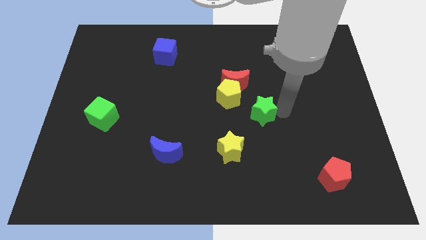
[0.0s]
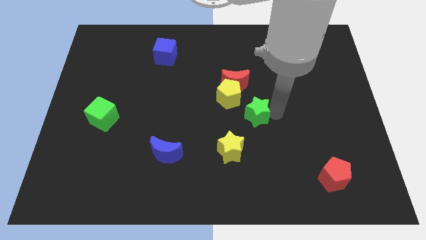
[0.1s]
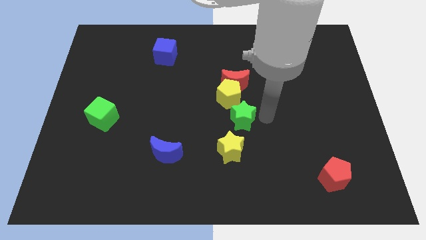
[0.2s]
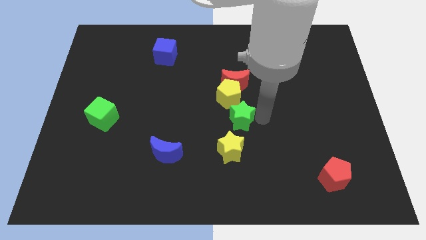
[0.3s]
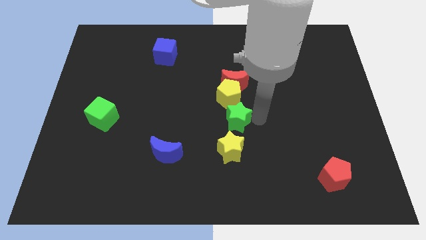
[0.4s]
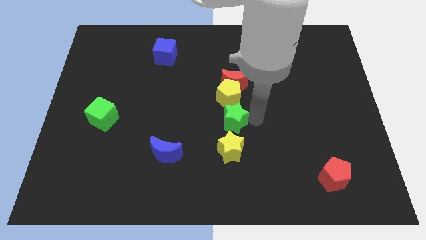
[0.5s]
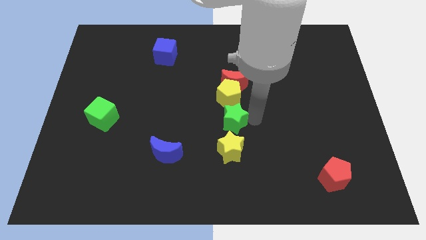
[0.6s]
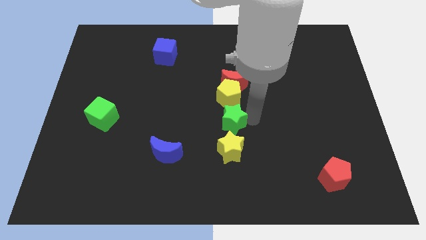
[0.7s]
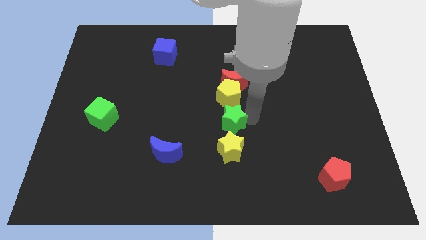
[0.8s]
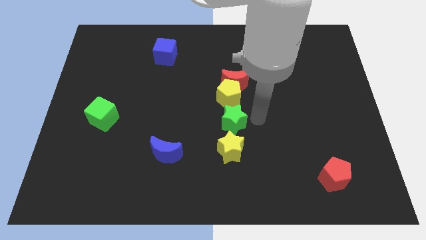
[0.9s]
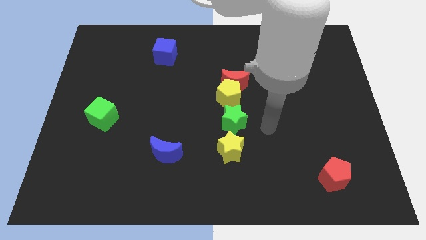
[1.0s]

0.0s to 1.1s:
place the green star in between the yellow blocks

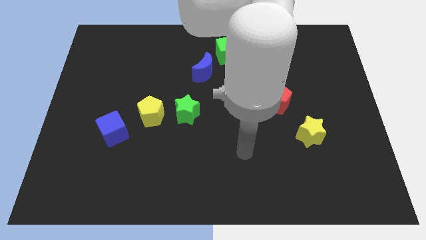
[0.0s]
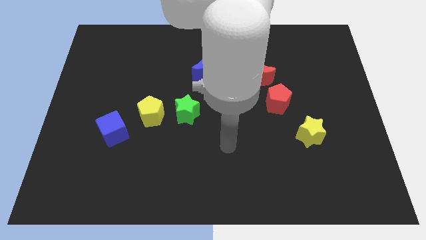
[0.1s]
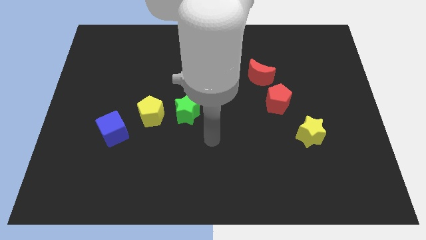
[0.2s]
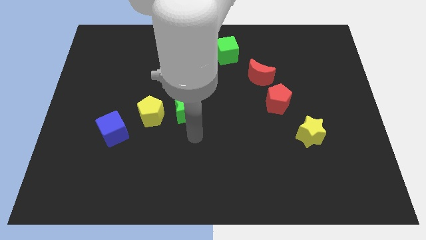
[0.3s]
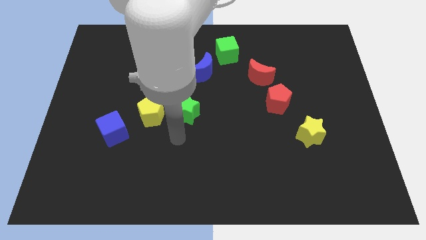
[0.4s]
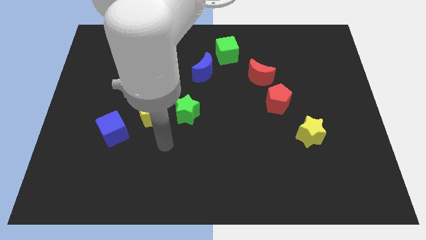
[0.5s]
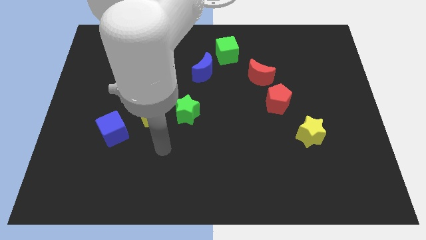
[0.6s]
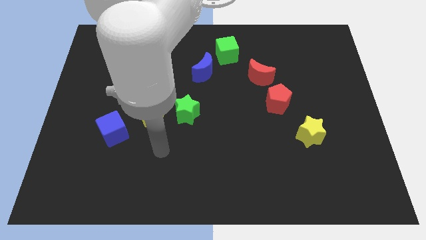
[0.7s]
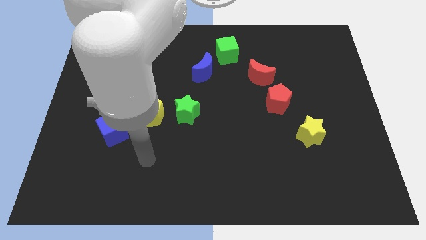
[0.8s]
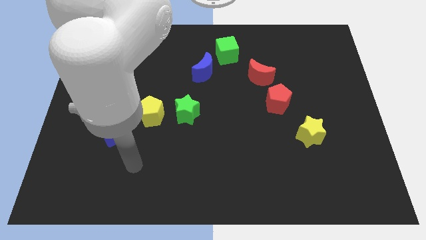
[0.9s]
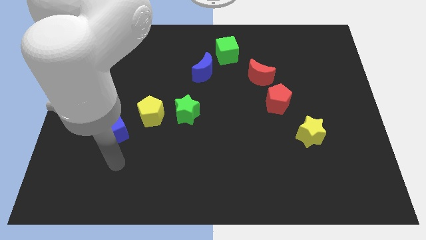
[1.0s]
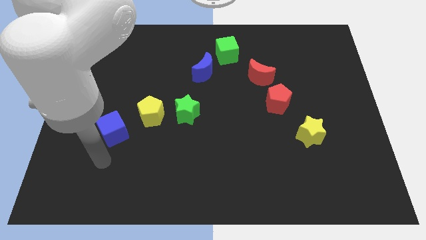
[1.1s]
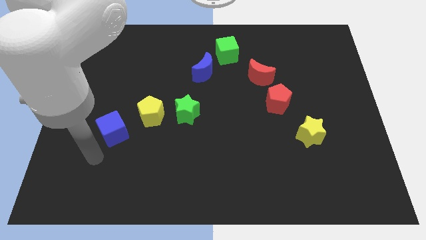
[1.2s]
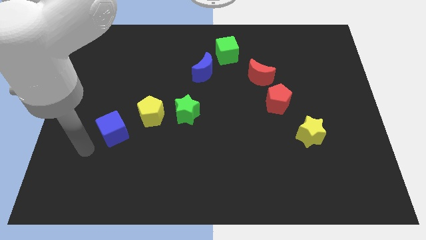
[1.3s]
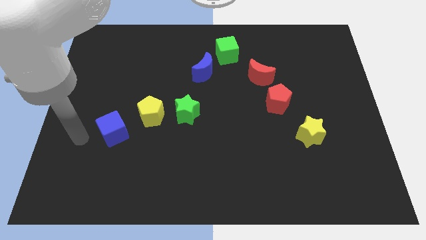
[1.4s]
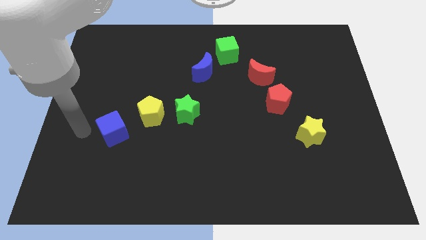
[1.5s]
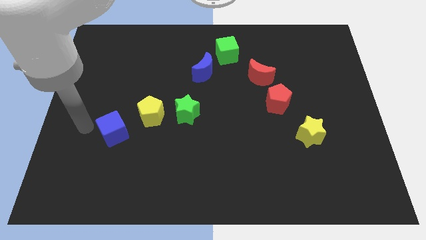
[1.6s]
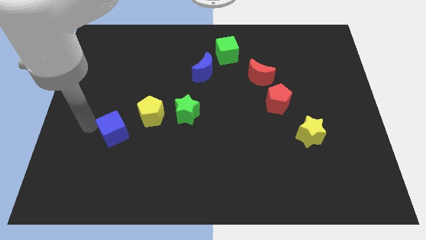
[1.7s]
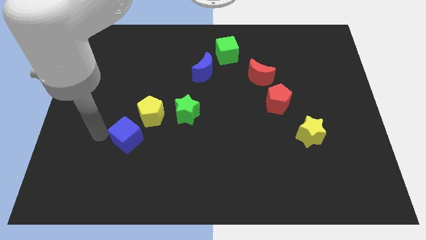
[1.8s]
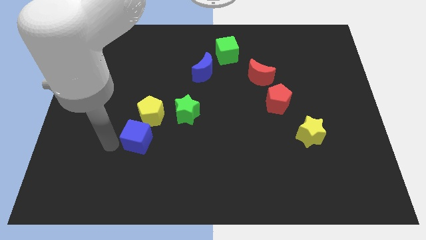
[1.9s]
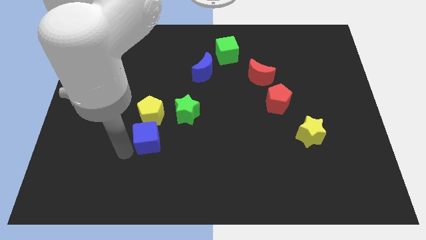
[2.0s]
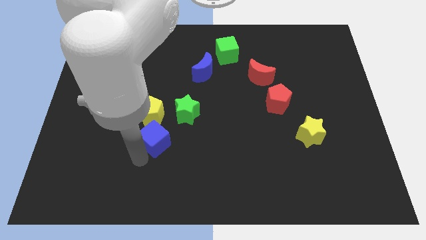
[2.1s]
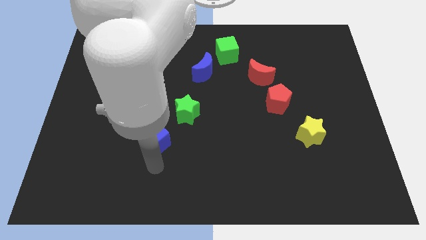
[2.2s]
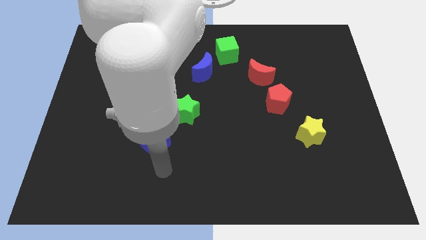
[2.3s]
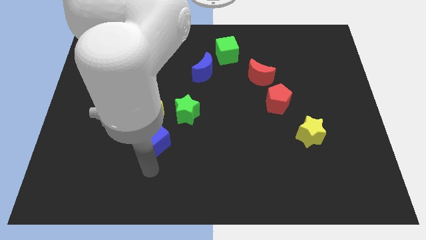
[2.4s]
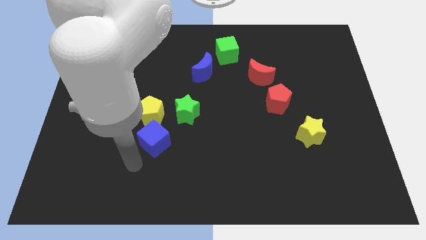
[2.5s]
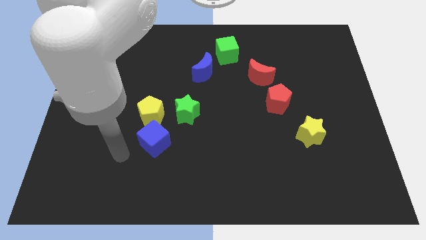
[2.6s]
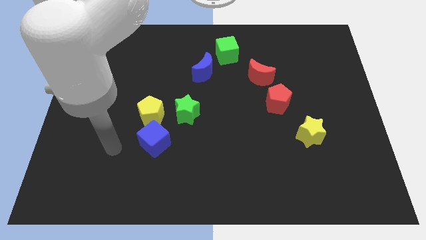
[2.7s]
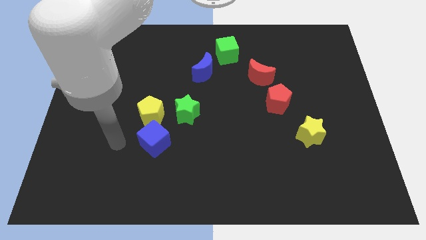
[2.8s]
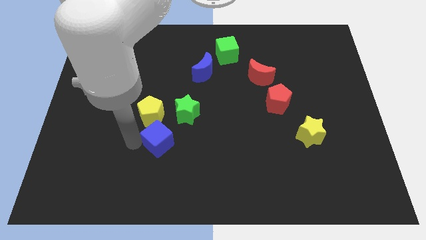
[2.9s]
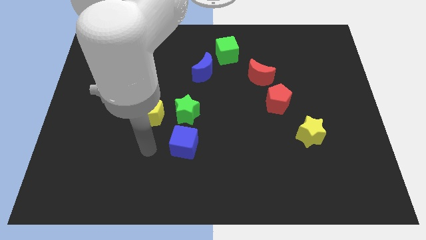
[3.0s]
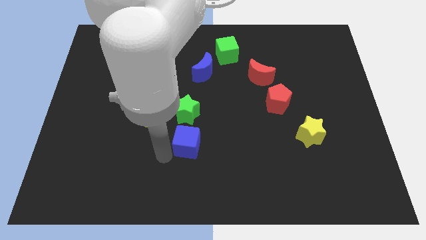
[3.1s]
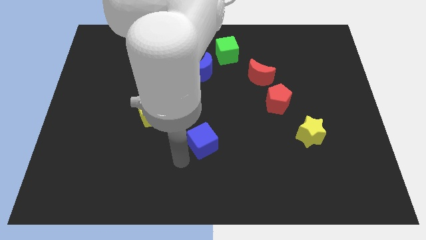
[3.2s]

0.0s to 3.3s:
place blue cube to the bottom of green star

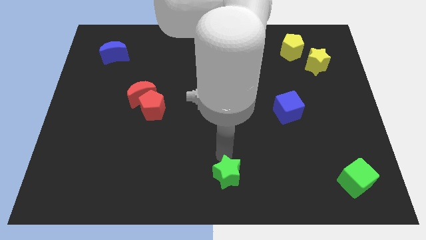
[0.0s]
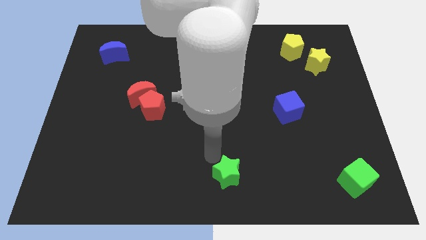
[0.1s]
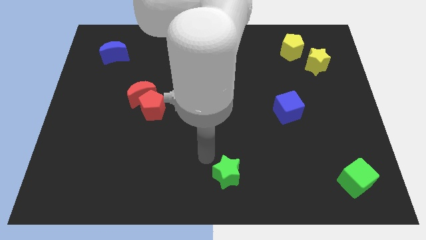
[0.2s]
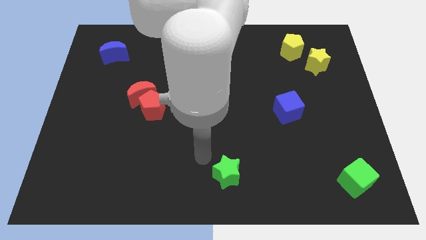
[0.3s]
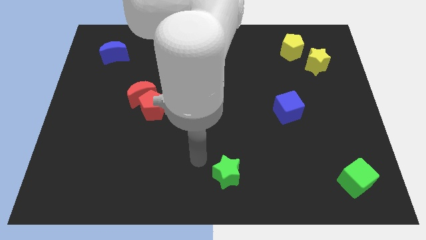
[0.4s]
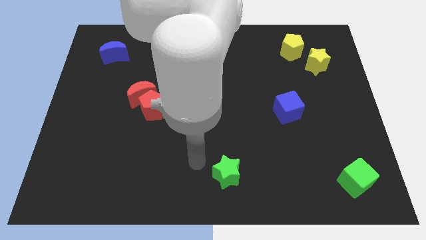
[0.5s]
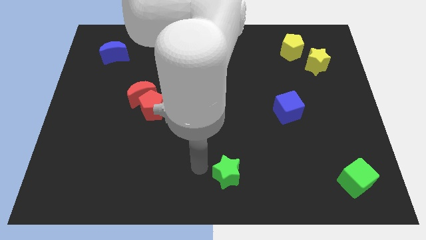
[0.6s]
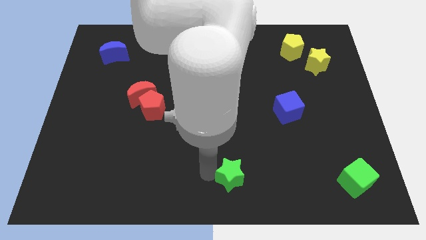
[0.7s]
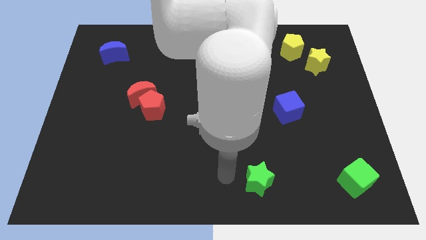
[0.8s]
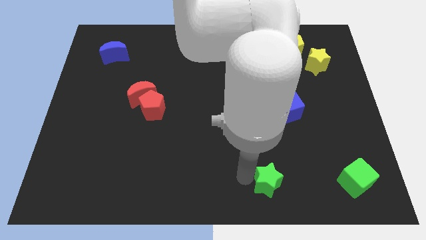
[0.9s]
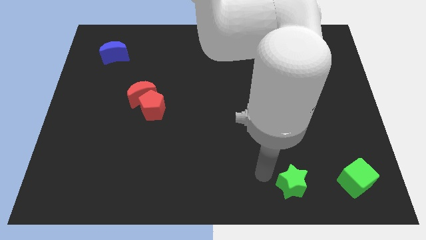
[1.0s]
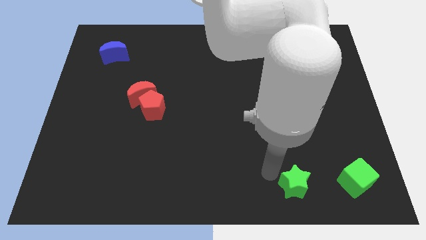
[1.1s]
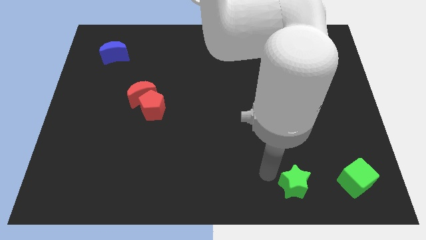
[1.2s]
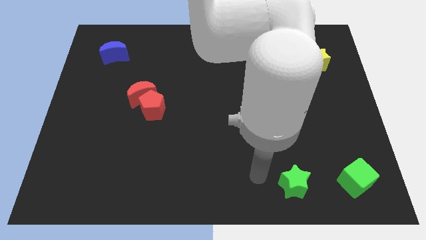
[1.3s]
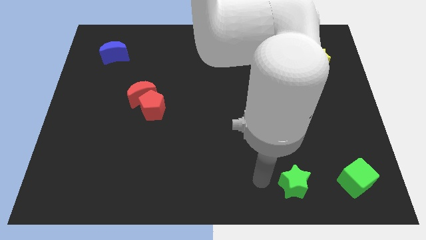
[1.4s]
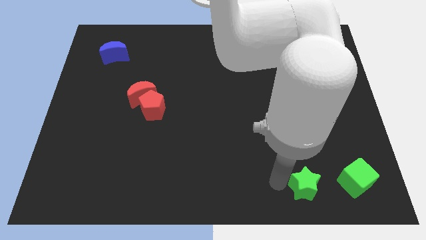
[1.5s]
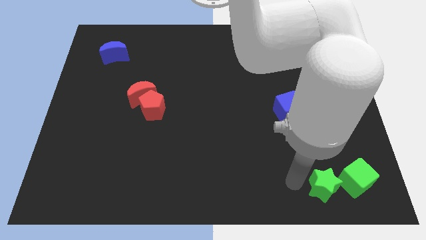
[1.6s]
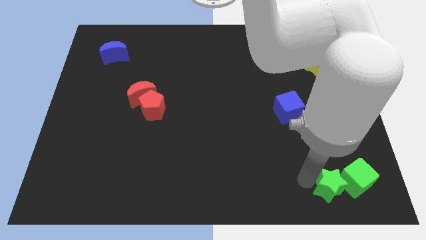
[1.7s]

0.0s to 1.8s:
move the green star towards green cube

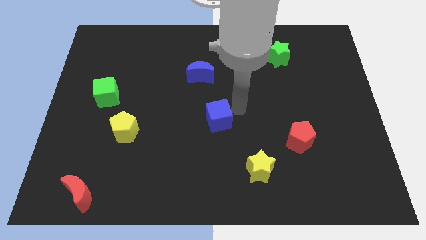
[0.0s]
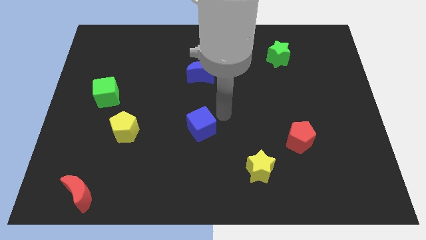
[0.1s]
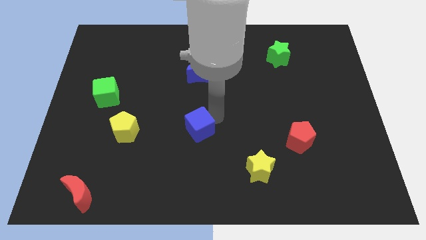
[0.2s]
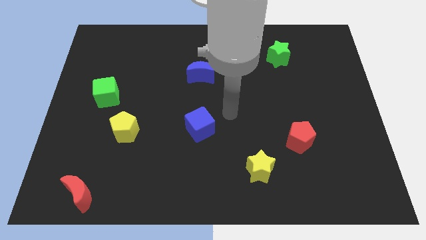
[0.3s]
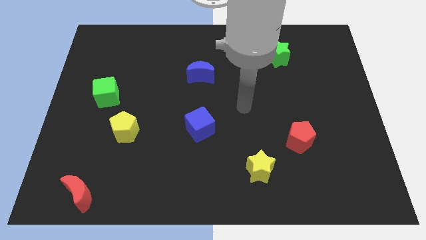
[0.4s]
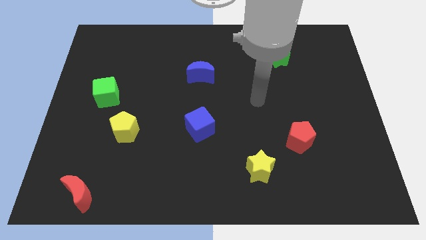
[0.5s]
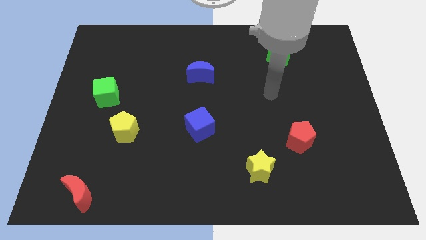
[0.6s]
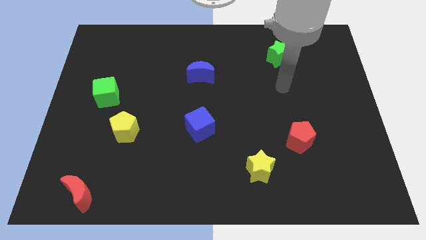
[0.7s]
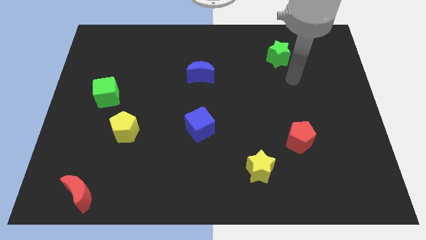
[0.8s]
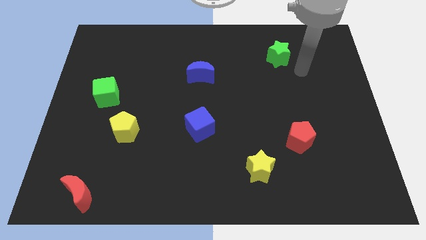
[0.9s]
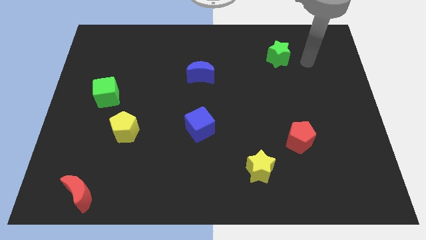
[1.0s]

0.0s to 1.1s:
move blue cube below the blue moon

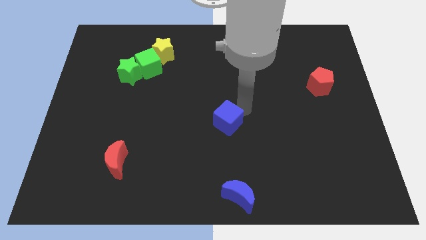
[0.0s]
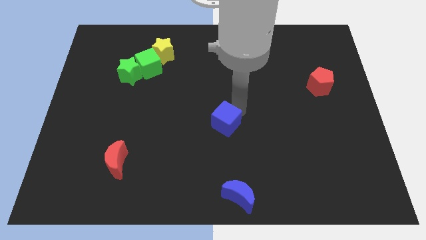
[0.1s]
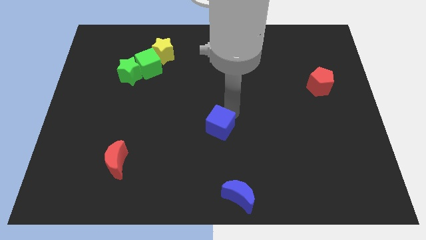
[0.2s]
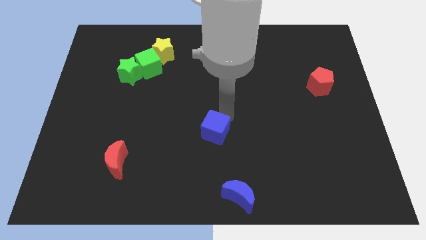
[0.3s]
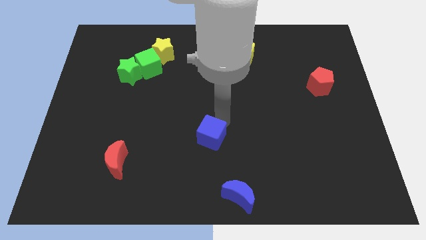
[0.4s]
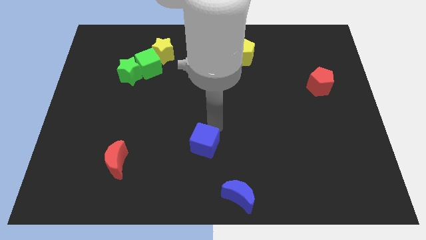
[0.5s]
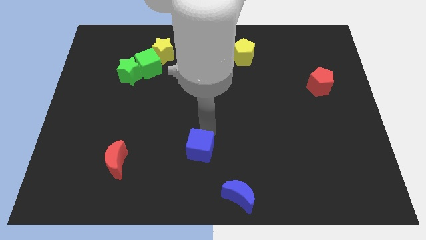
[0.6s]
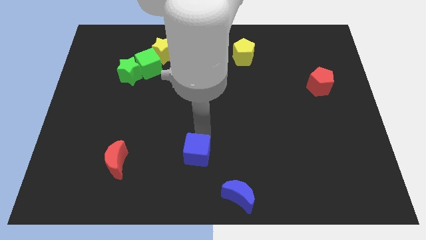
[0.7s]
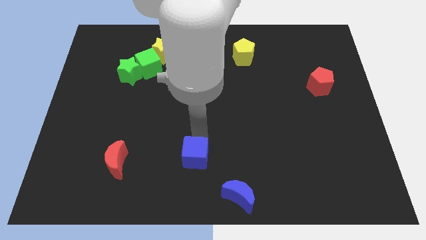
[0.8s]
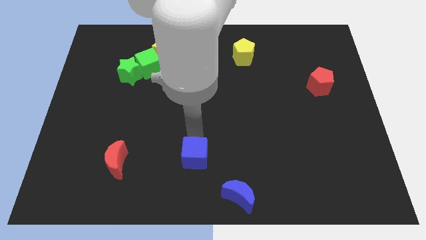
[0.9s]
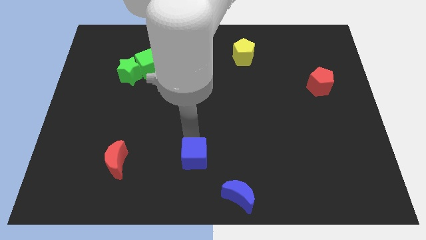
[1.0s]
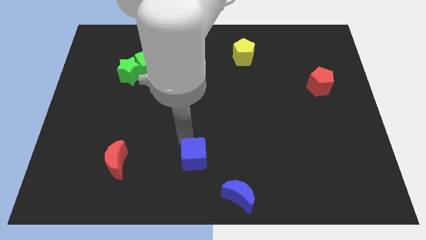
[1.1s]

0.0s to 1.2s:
push the blue cube right to the red crescent

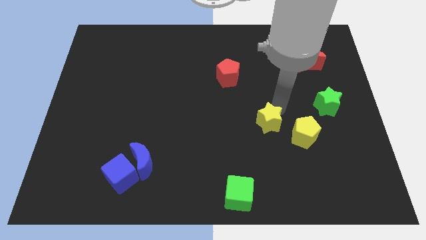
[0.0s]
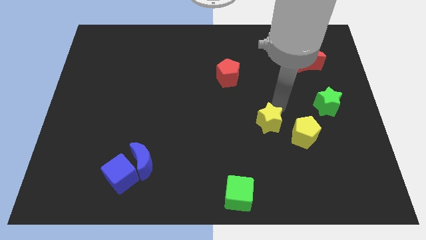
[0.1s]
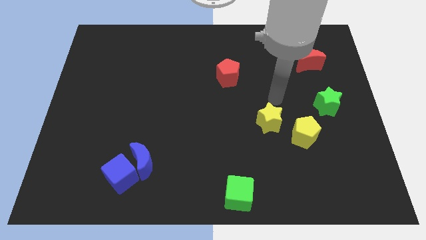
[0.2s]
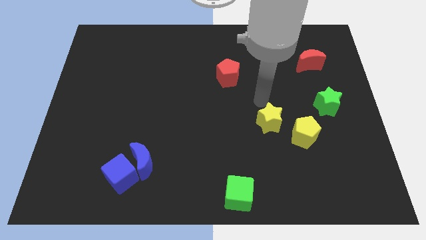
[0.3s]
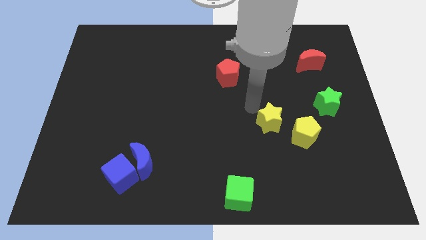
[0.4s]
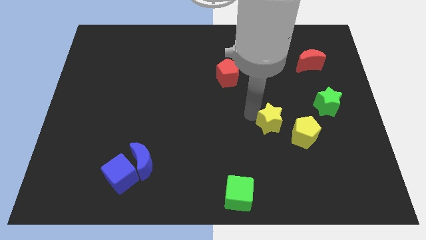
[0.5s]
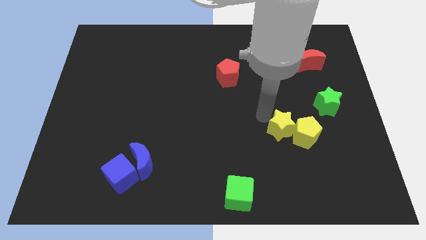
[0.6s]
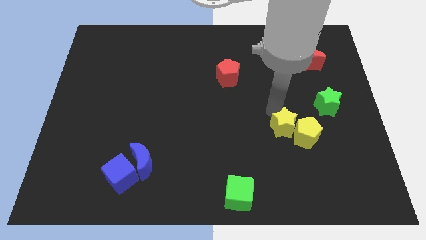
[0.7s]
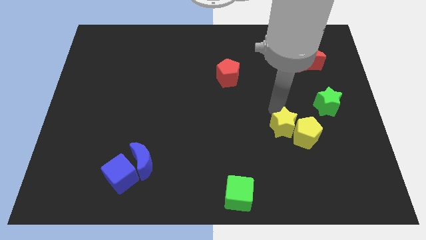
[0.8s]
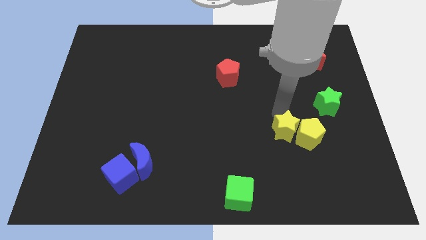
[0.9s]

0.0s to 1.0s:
push yellow star into yellow pentagon
